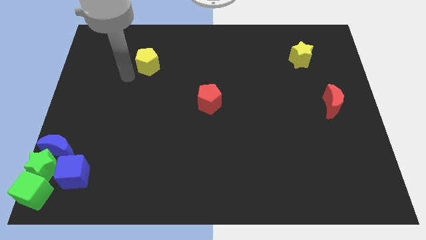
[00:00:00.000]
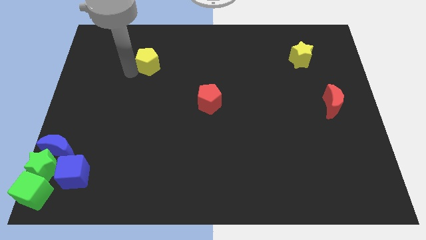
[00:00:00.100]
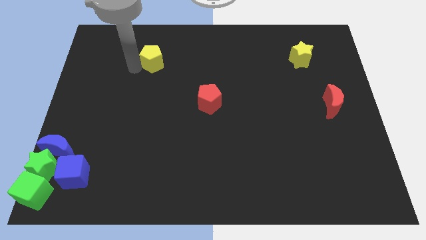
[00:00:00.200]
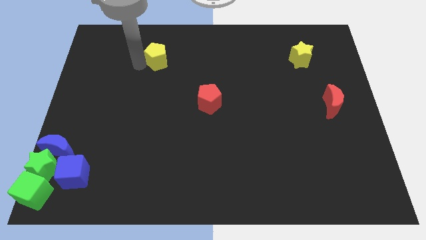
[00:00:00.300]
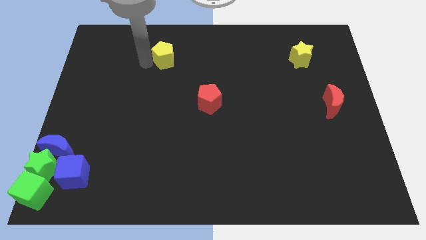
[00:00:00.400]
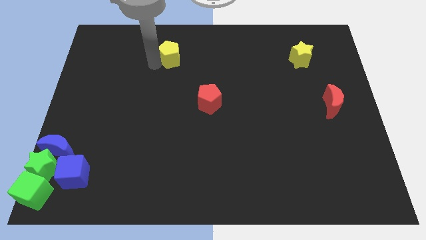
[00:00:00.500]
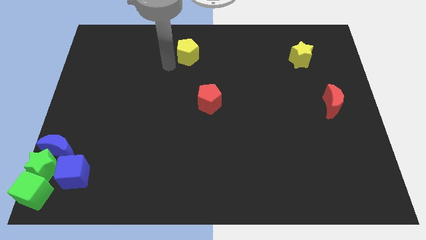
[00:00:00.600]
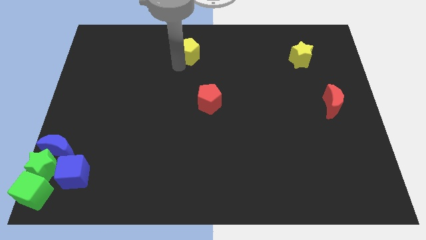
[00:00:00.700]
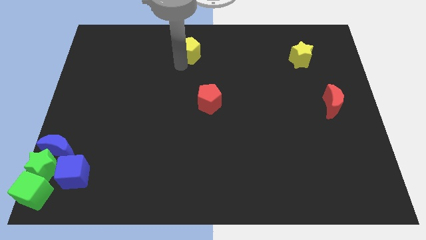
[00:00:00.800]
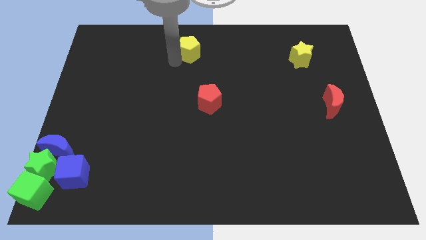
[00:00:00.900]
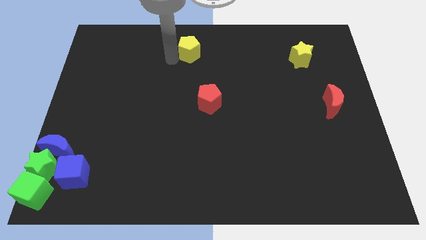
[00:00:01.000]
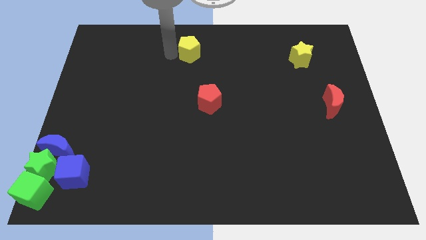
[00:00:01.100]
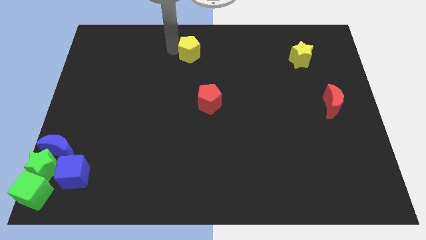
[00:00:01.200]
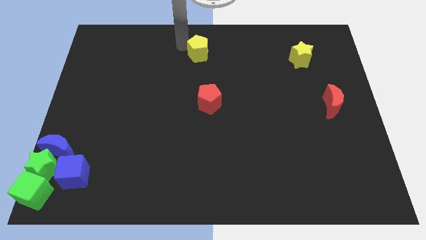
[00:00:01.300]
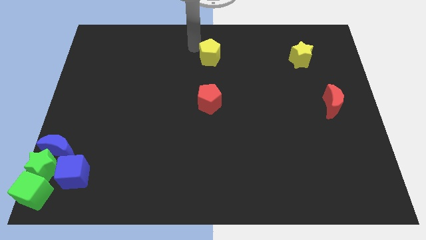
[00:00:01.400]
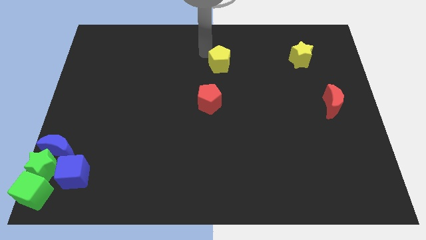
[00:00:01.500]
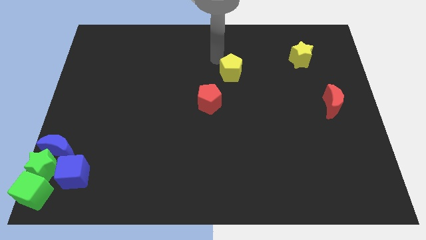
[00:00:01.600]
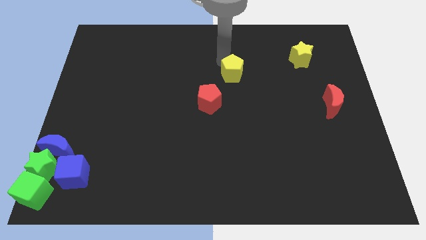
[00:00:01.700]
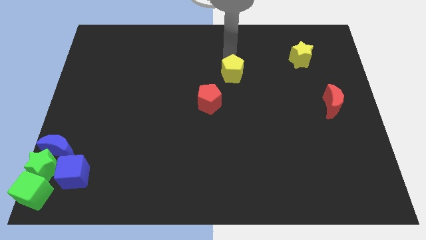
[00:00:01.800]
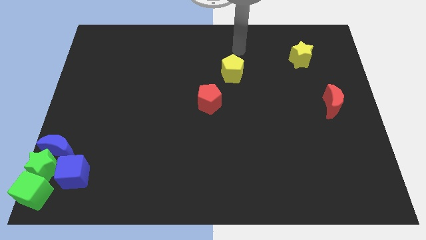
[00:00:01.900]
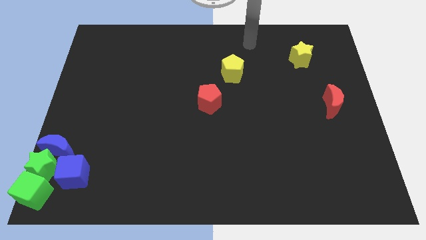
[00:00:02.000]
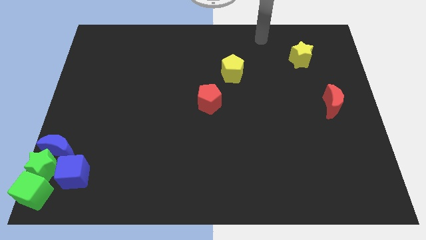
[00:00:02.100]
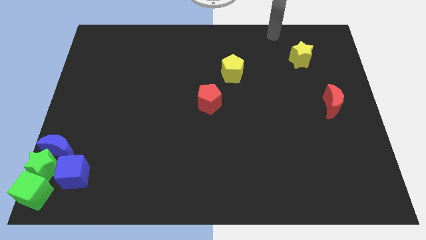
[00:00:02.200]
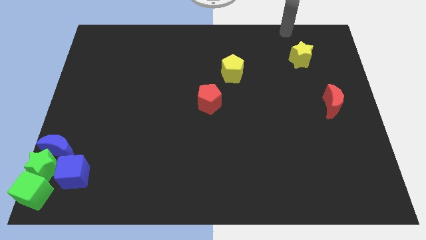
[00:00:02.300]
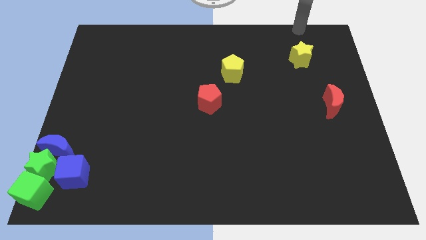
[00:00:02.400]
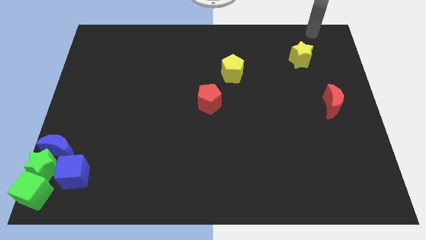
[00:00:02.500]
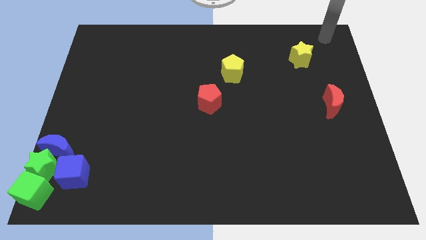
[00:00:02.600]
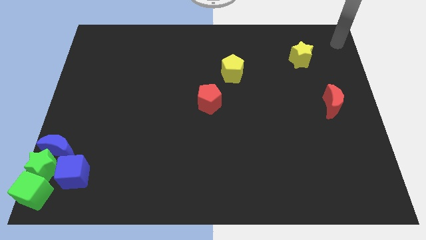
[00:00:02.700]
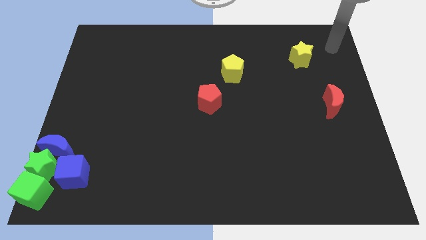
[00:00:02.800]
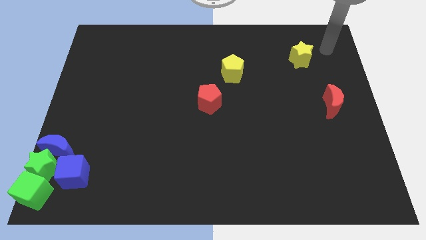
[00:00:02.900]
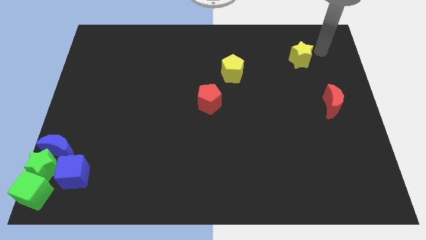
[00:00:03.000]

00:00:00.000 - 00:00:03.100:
move your hand to the right of the yellow star

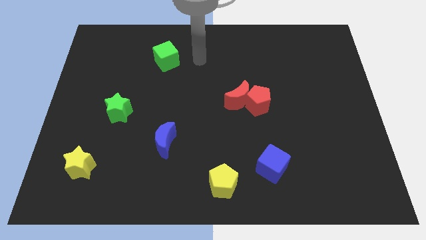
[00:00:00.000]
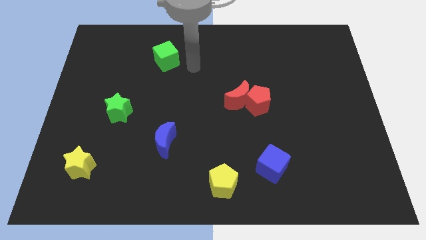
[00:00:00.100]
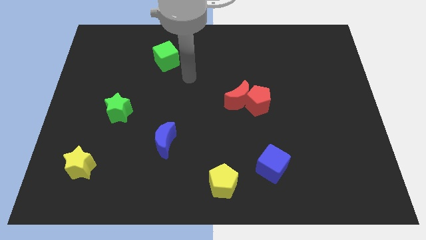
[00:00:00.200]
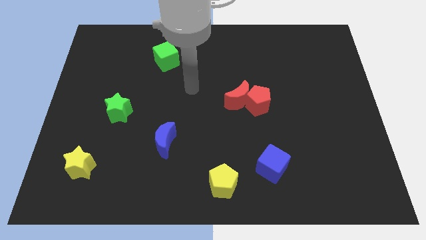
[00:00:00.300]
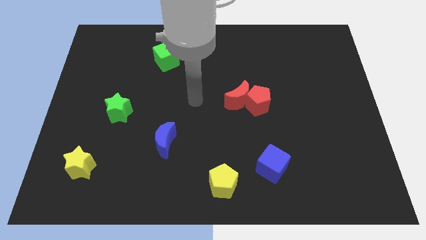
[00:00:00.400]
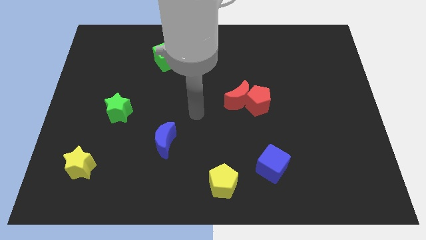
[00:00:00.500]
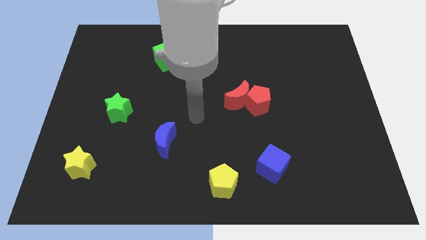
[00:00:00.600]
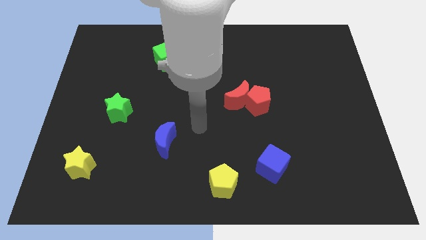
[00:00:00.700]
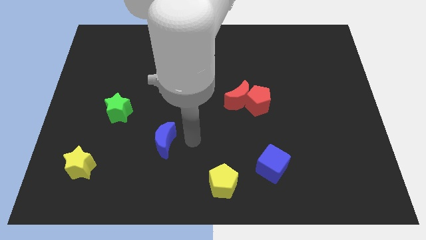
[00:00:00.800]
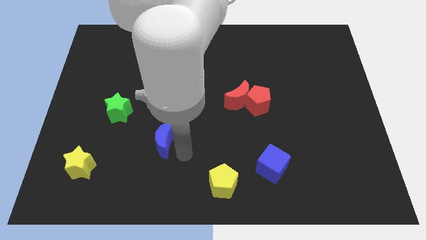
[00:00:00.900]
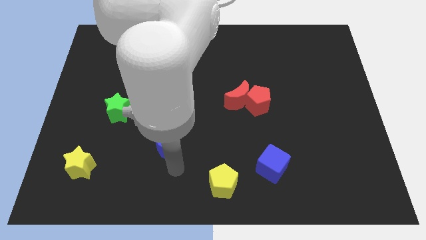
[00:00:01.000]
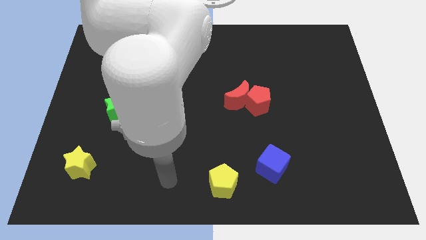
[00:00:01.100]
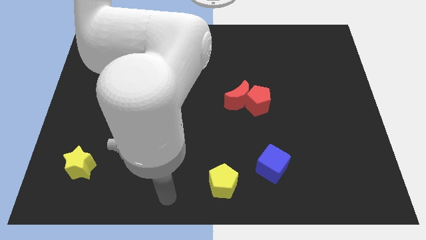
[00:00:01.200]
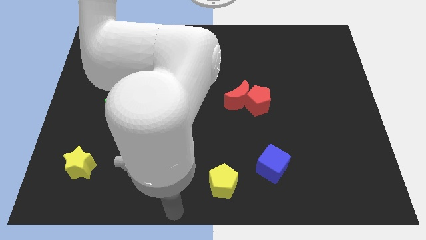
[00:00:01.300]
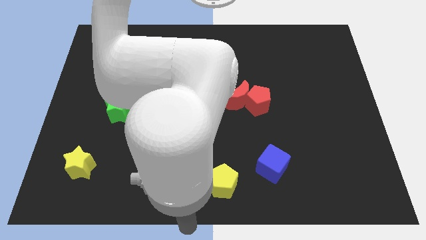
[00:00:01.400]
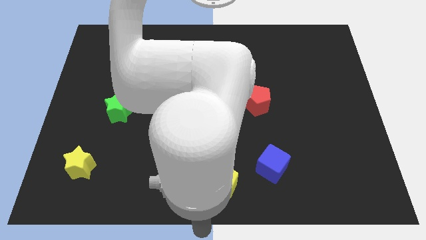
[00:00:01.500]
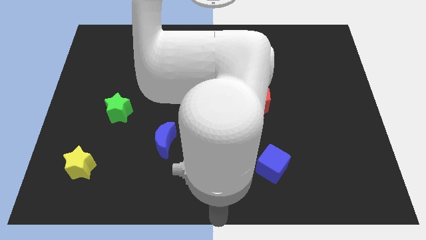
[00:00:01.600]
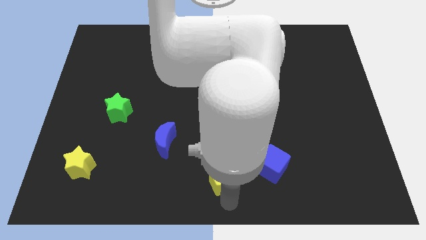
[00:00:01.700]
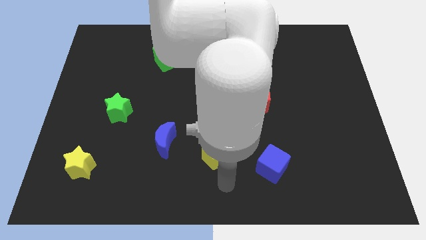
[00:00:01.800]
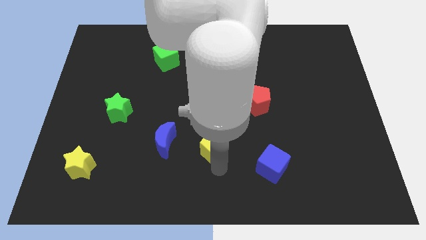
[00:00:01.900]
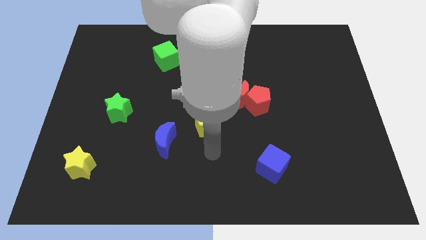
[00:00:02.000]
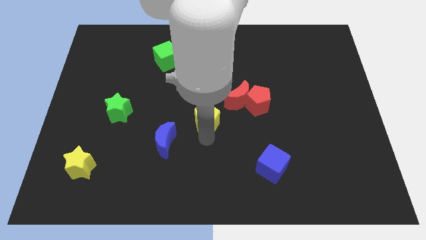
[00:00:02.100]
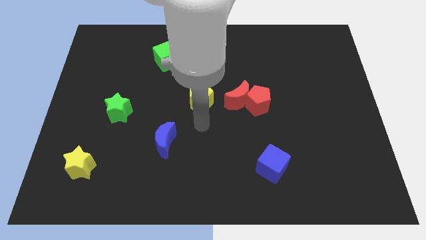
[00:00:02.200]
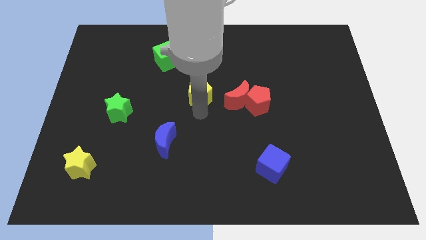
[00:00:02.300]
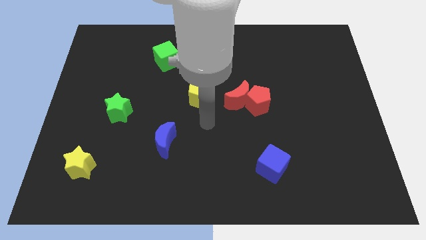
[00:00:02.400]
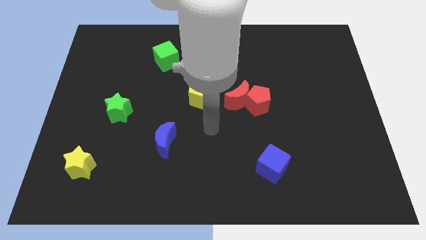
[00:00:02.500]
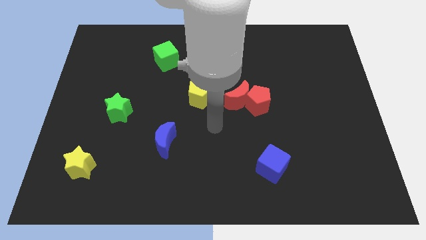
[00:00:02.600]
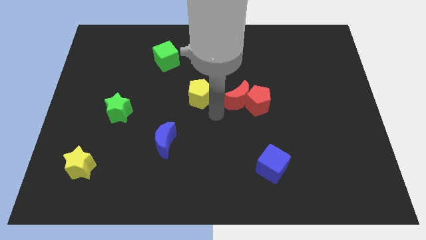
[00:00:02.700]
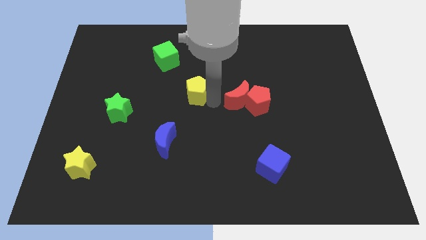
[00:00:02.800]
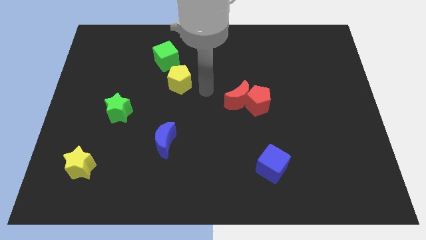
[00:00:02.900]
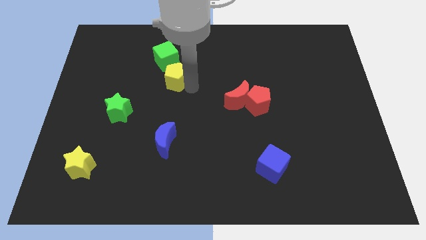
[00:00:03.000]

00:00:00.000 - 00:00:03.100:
push yellow pentagon towards the green cube

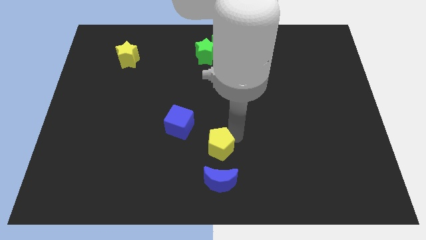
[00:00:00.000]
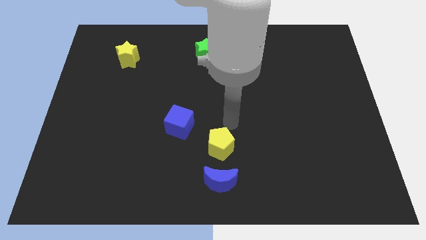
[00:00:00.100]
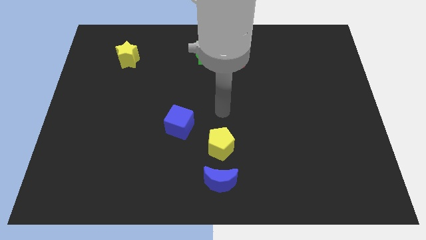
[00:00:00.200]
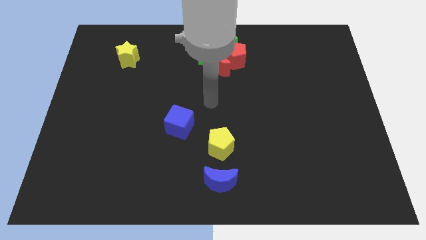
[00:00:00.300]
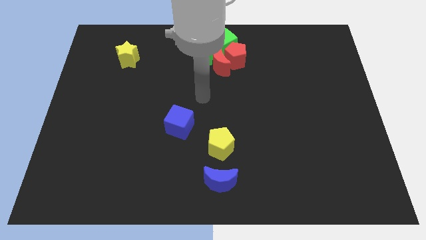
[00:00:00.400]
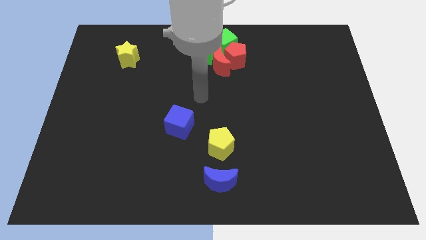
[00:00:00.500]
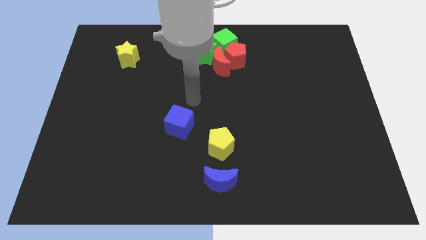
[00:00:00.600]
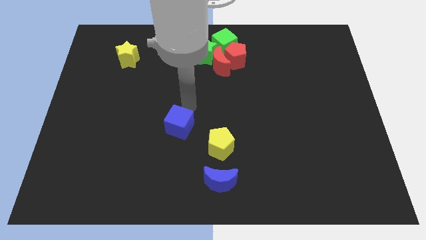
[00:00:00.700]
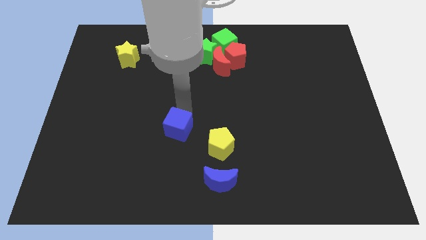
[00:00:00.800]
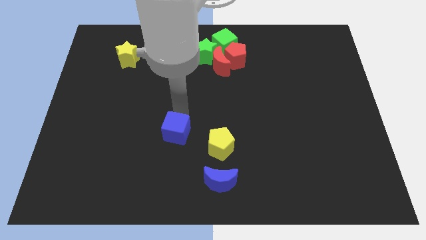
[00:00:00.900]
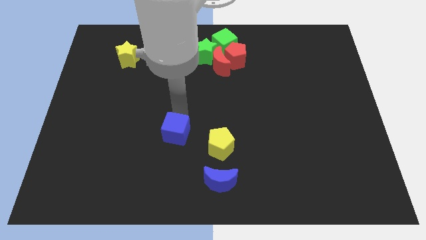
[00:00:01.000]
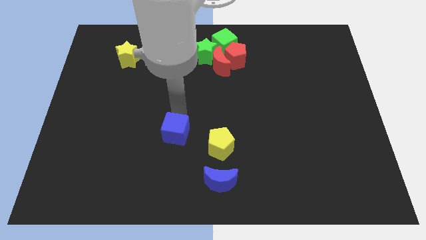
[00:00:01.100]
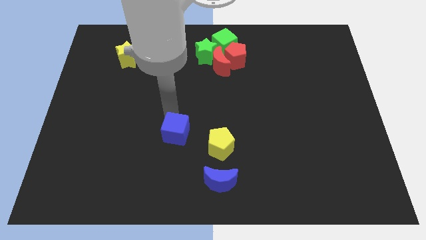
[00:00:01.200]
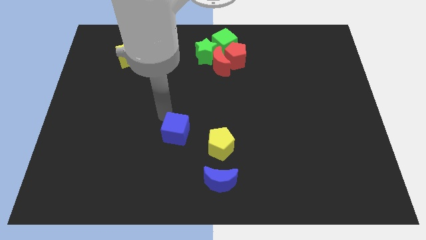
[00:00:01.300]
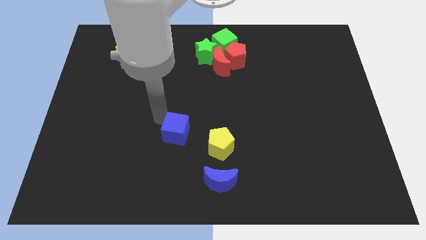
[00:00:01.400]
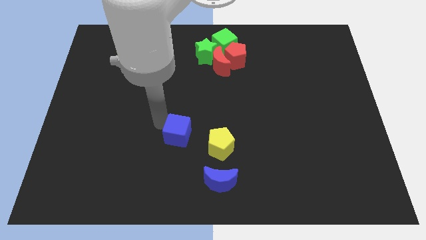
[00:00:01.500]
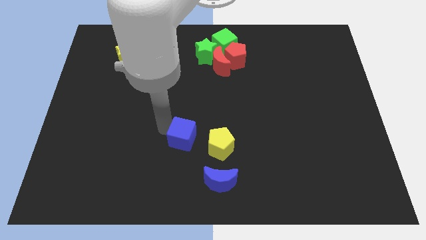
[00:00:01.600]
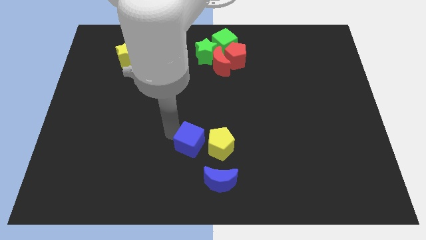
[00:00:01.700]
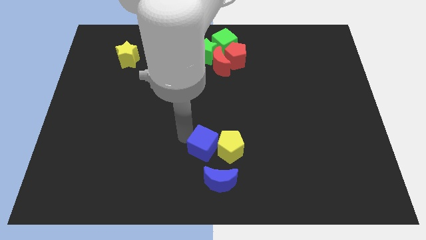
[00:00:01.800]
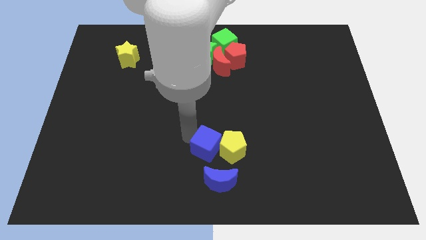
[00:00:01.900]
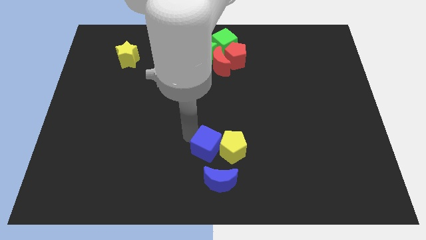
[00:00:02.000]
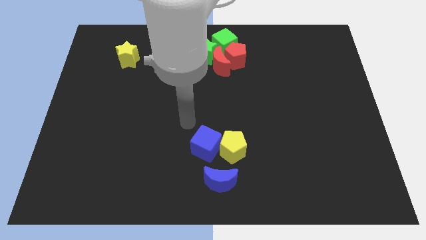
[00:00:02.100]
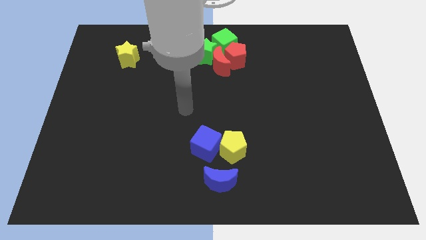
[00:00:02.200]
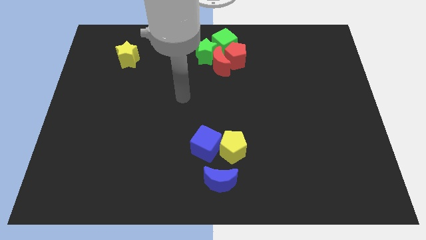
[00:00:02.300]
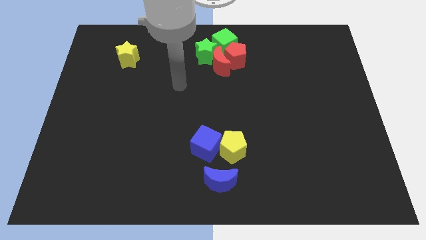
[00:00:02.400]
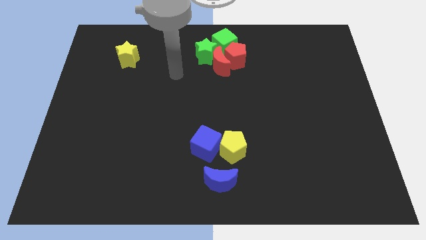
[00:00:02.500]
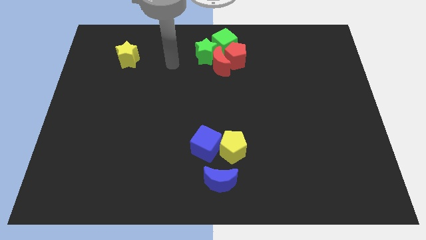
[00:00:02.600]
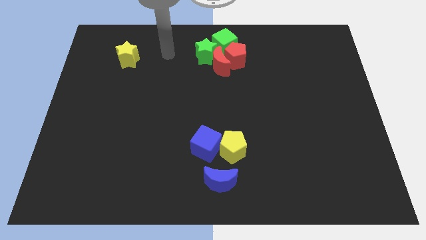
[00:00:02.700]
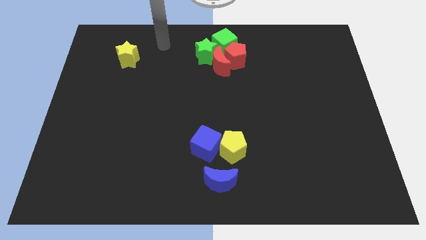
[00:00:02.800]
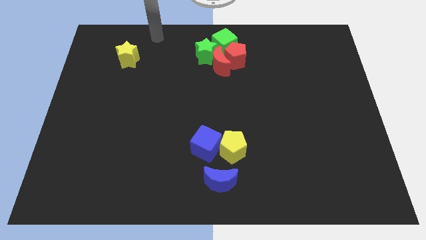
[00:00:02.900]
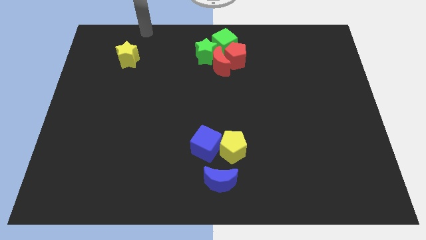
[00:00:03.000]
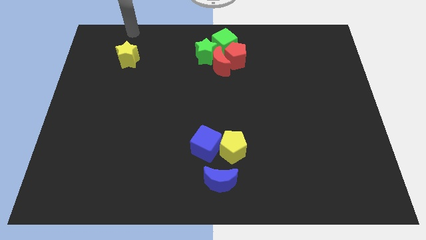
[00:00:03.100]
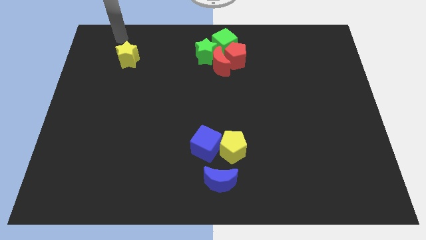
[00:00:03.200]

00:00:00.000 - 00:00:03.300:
push the blue cube into the yellow pentgaon
